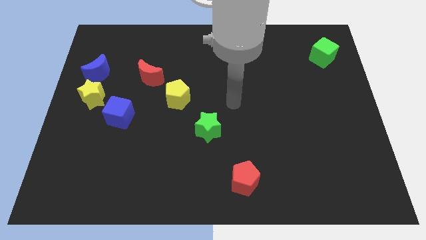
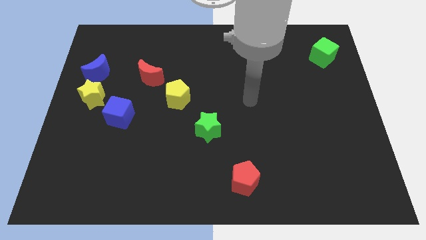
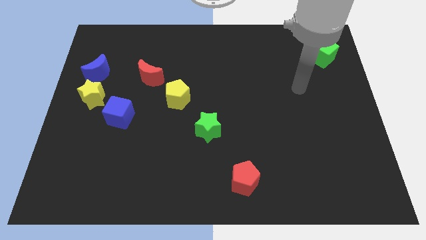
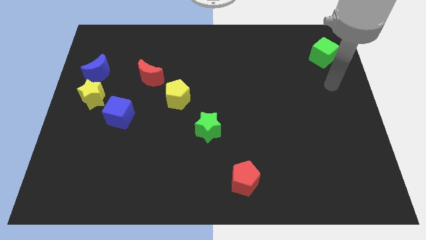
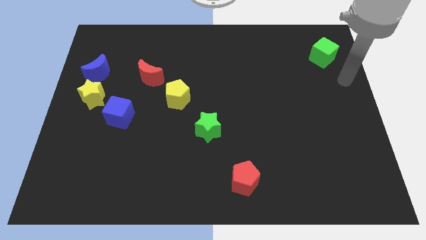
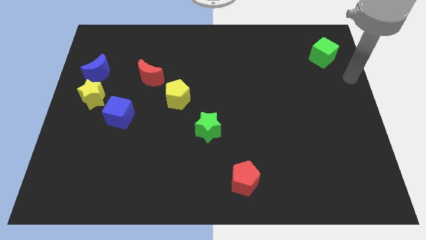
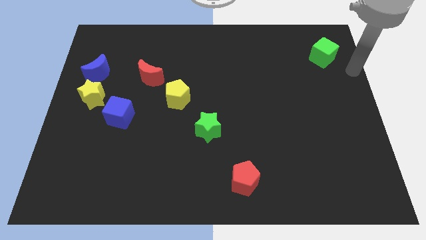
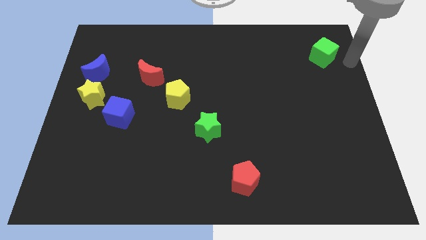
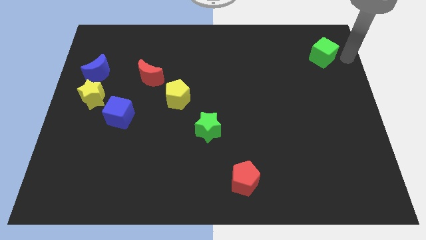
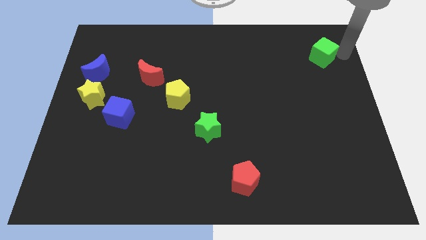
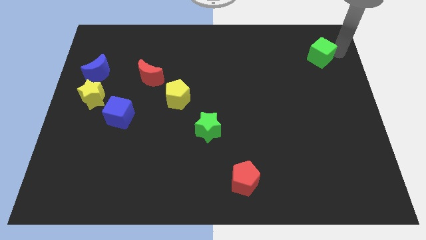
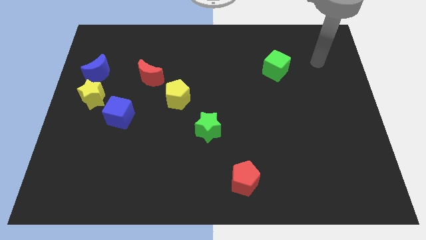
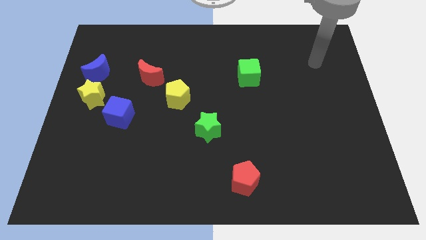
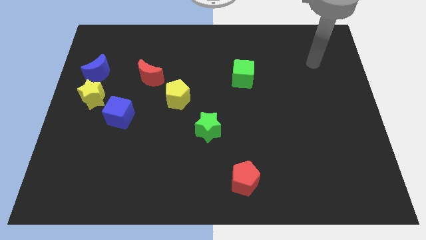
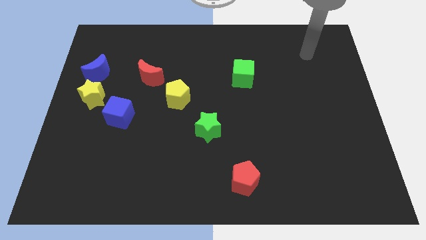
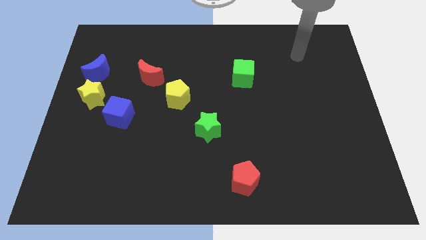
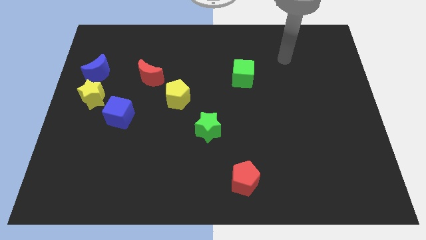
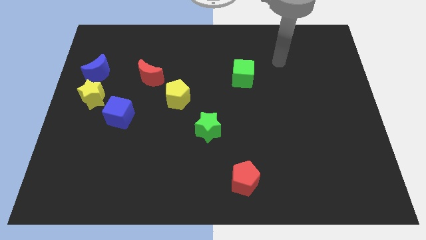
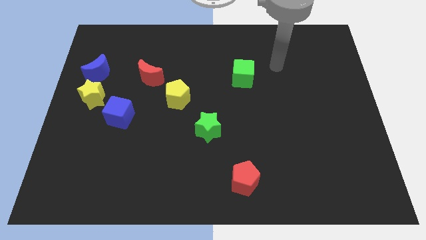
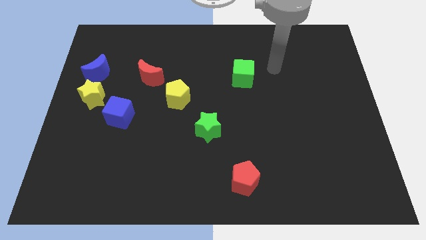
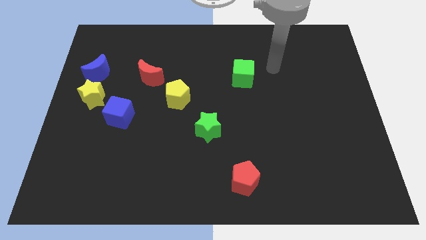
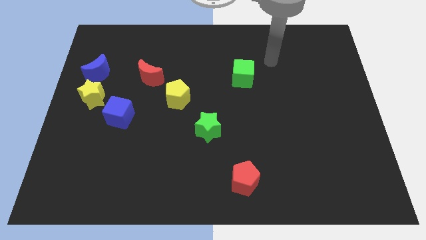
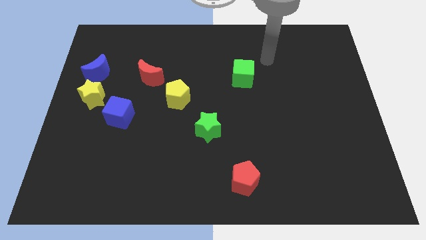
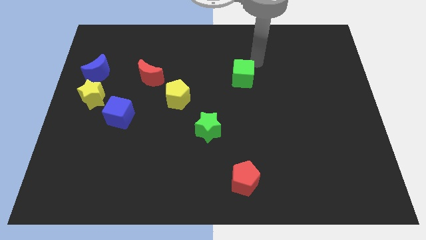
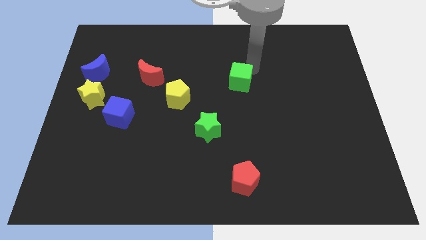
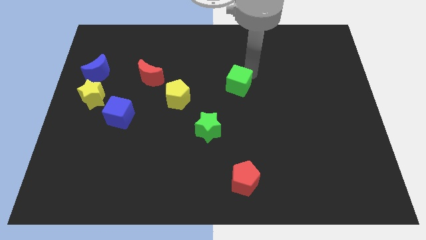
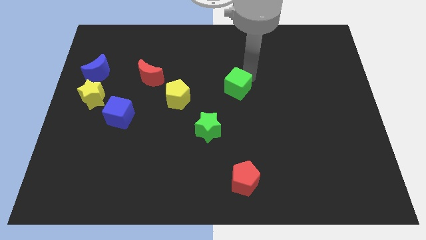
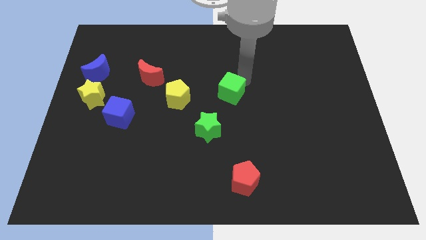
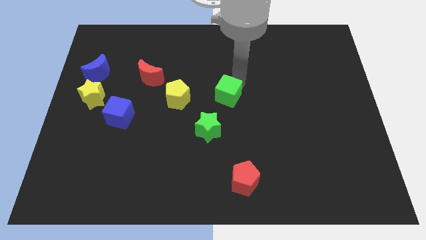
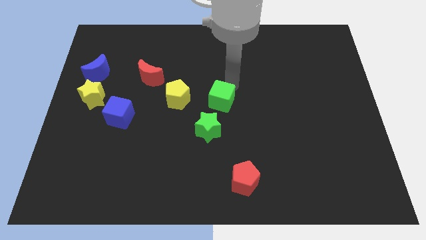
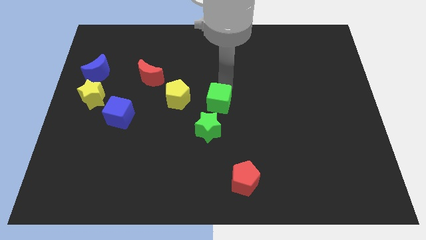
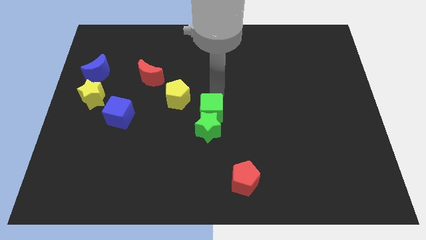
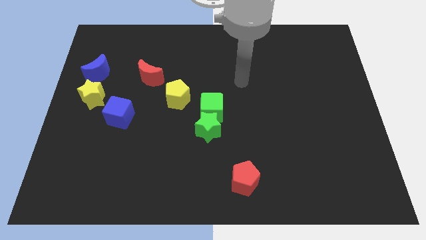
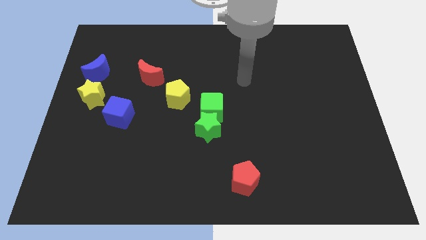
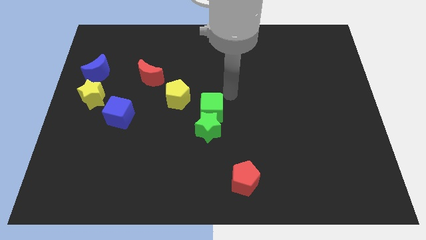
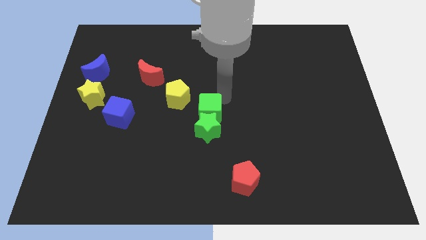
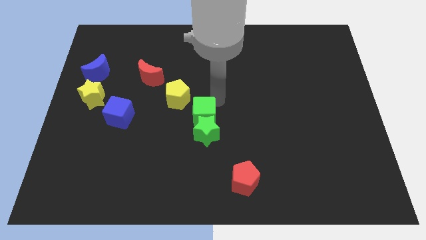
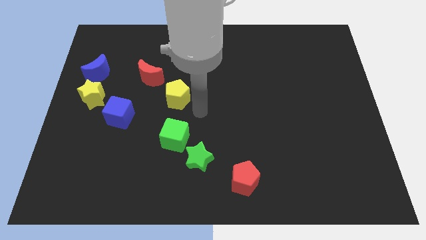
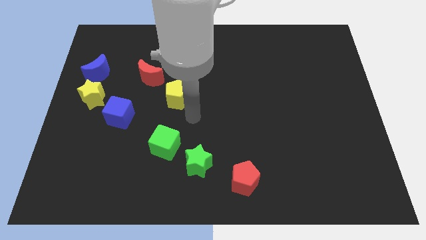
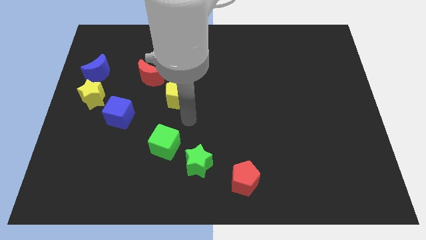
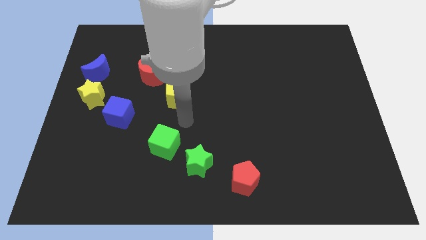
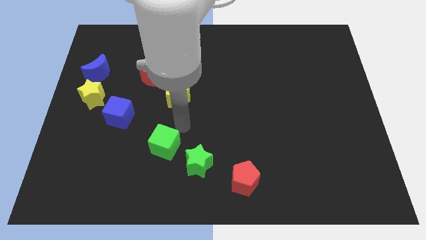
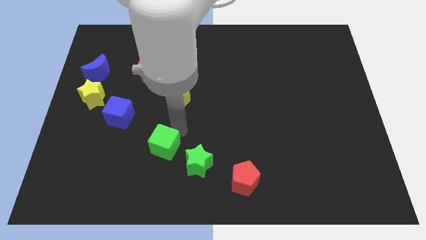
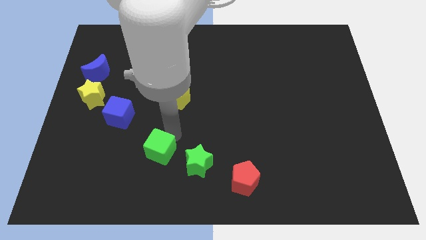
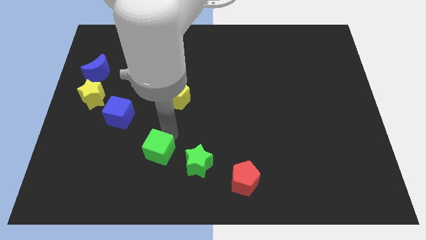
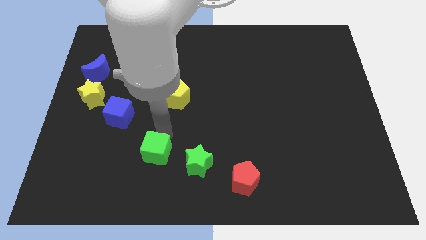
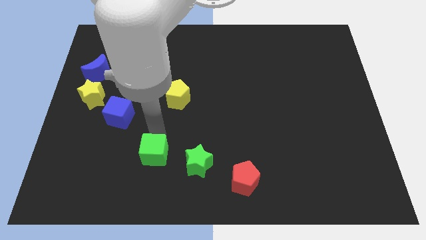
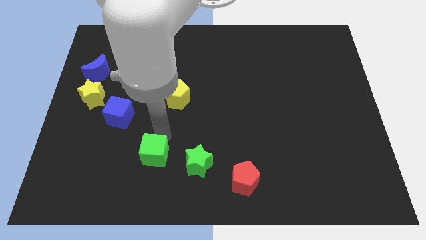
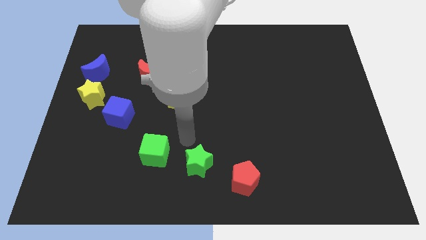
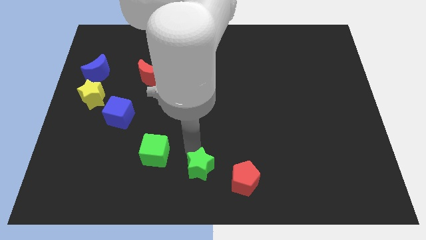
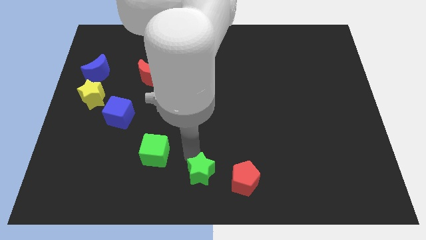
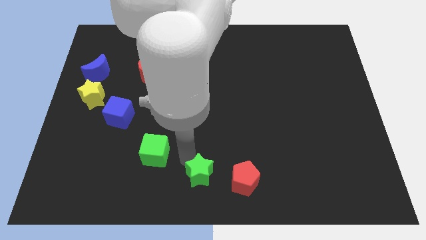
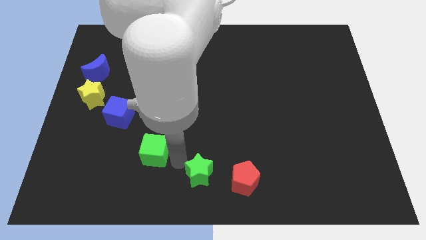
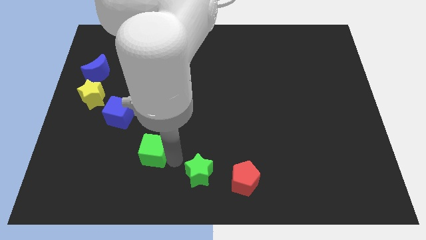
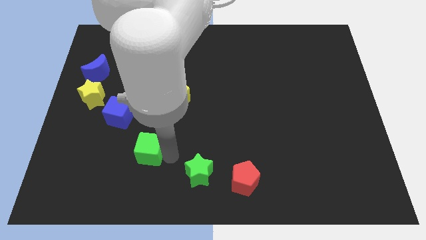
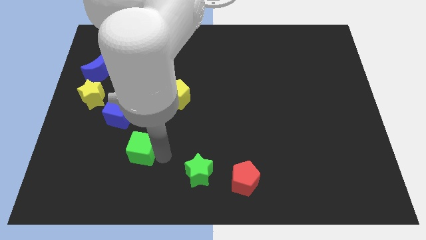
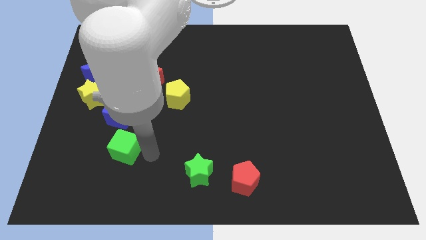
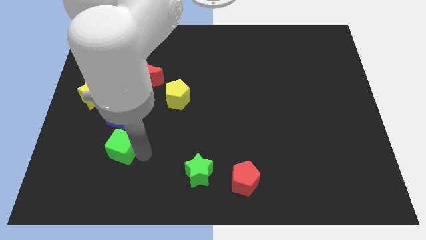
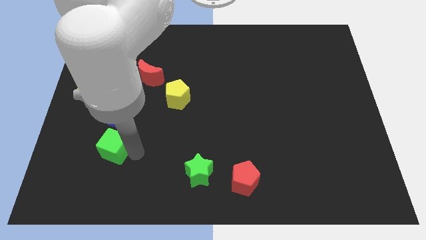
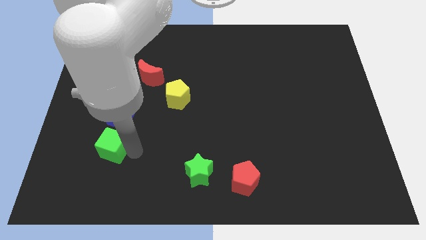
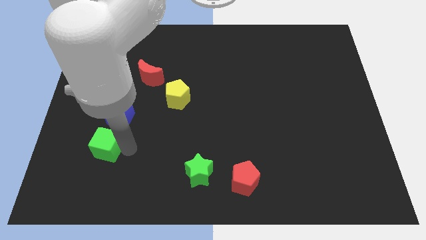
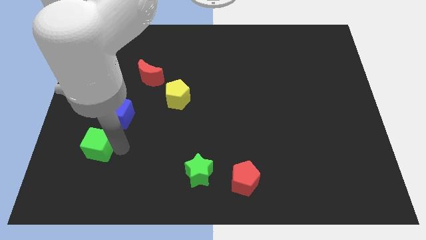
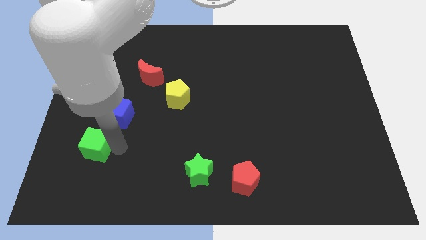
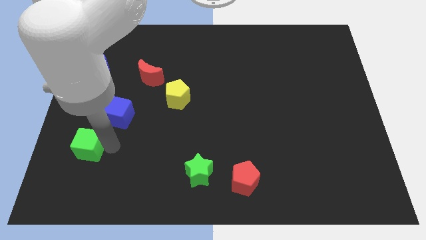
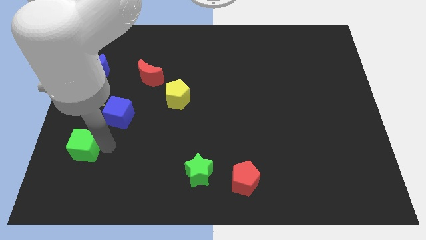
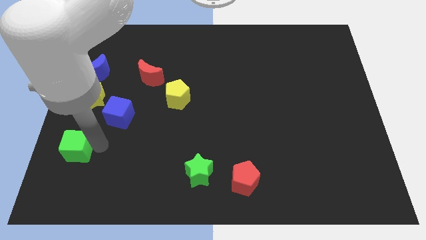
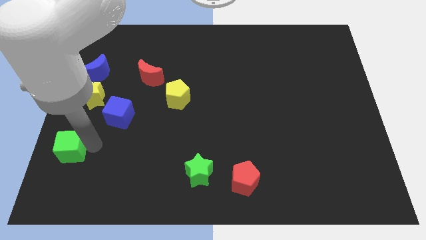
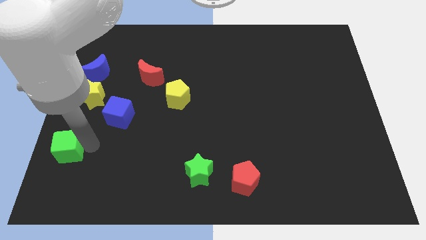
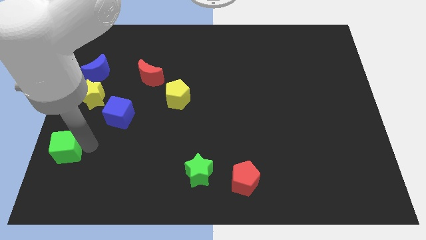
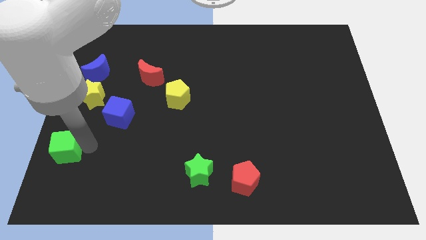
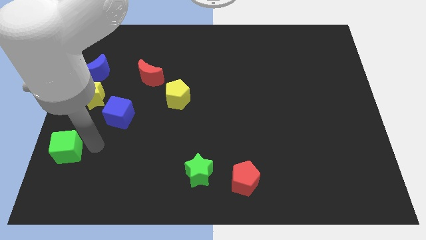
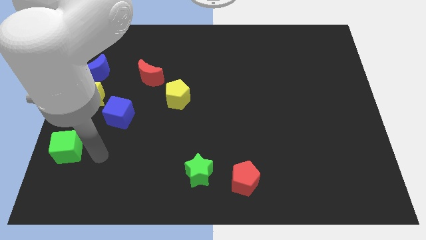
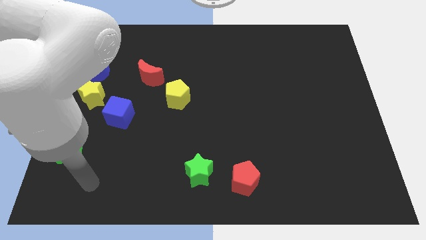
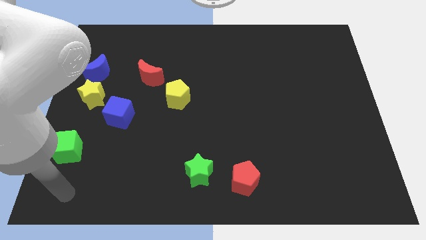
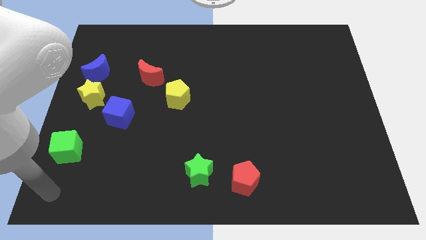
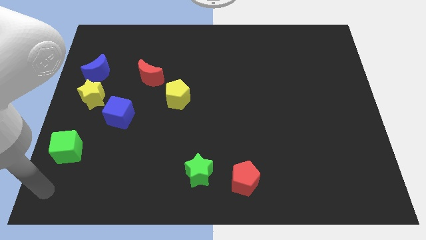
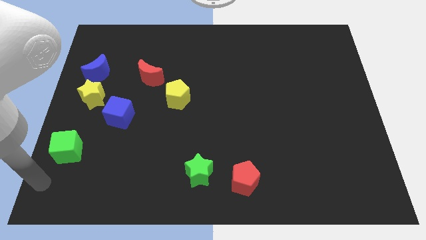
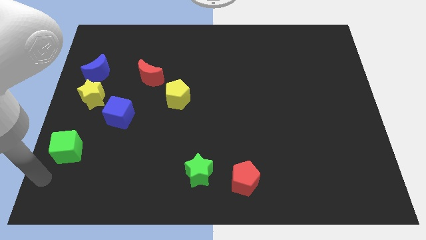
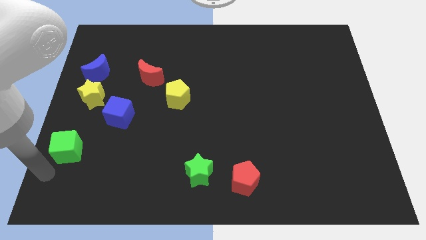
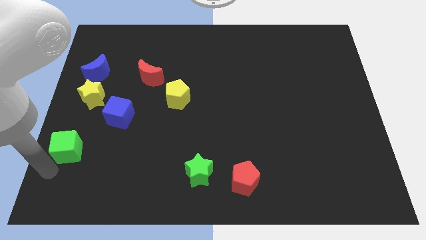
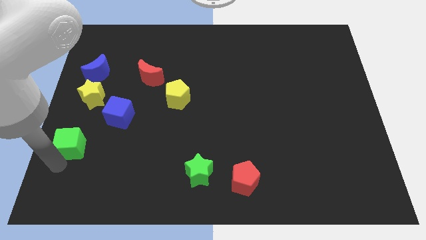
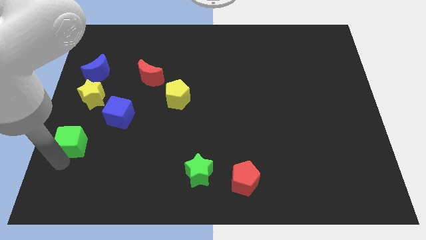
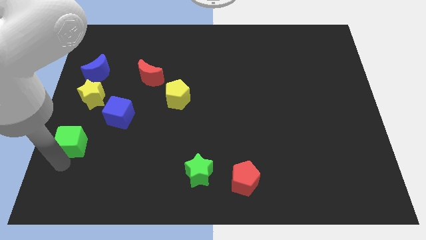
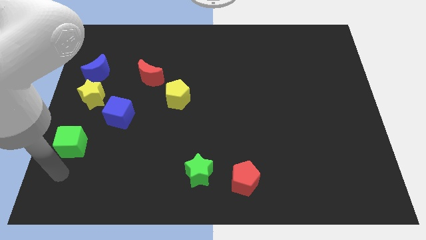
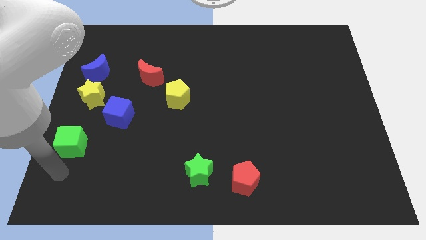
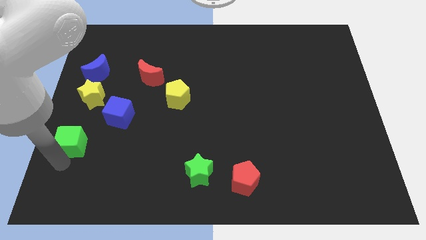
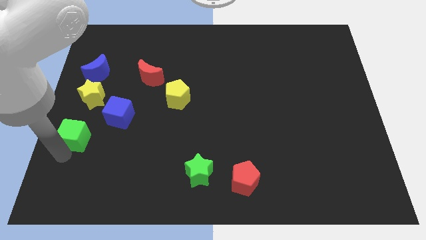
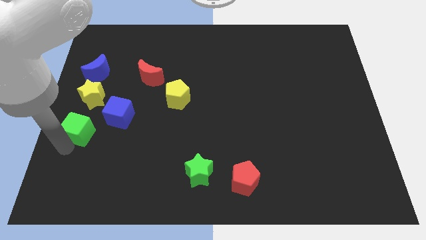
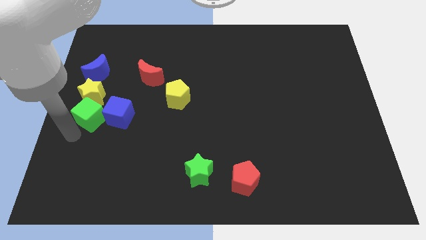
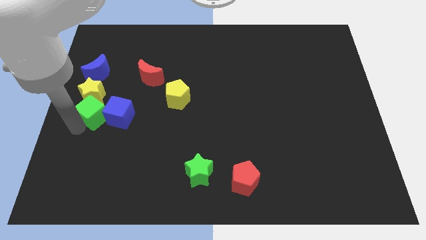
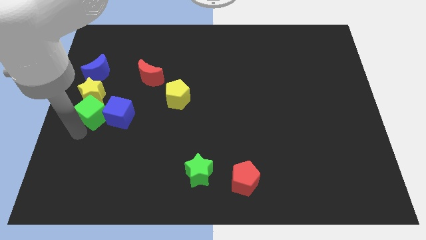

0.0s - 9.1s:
slide the green cube to the yellow star
